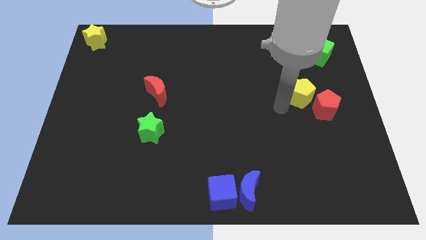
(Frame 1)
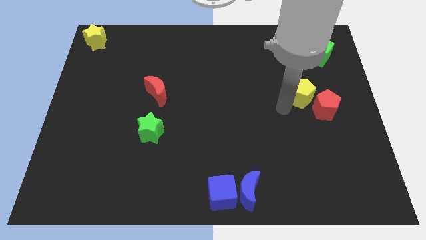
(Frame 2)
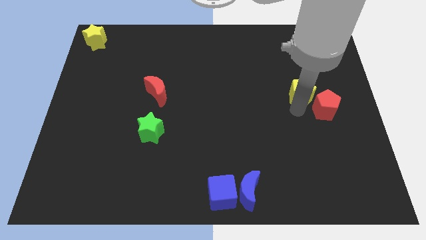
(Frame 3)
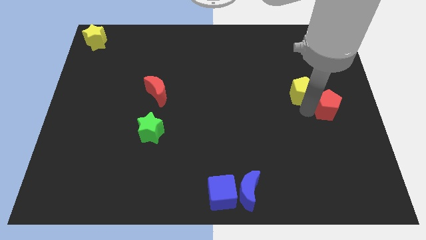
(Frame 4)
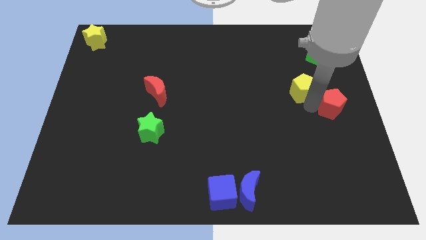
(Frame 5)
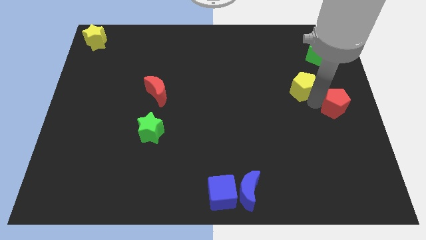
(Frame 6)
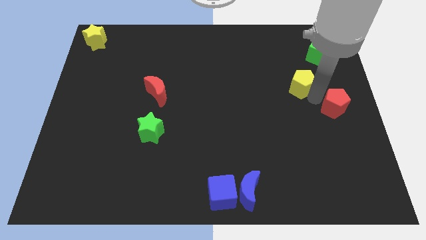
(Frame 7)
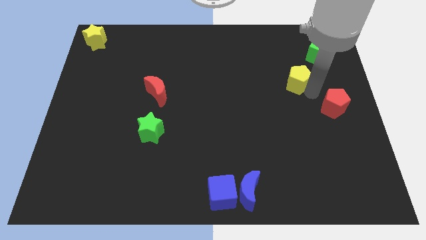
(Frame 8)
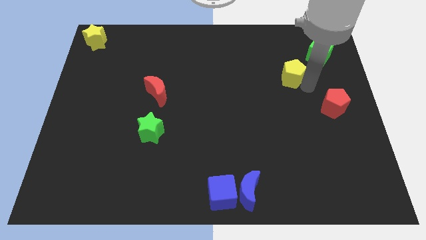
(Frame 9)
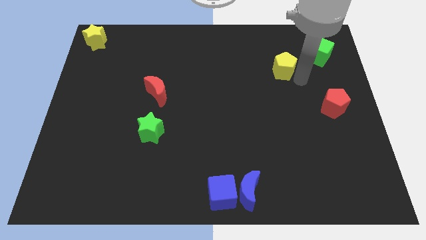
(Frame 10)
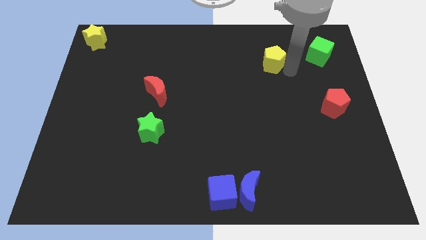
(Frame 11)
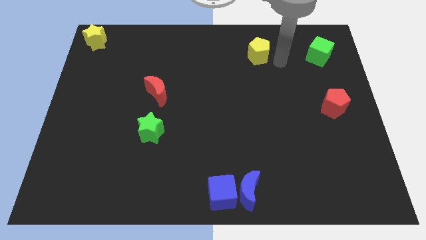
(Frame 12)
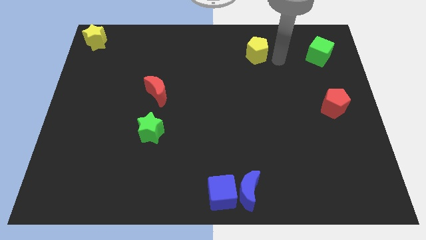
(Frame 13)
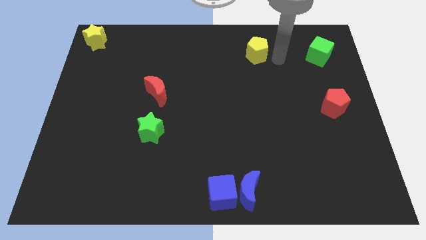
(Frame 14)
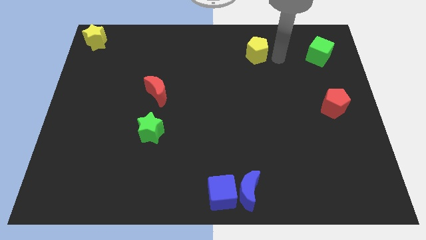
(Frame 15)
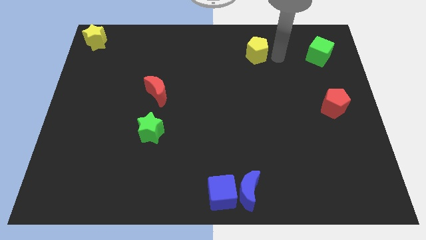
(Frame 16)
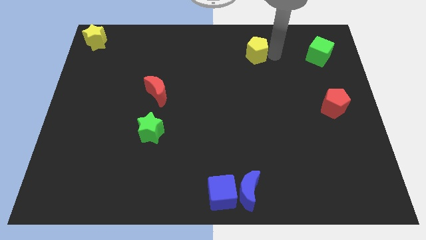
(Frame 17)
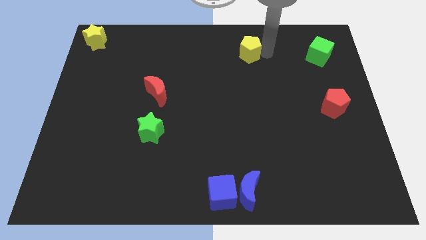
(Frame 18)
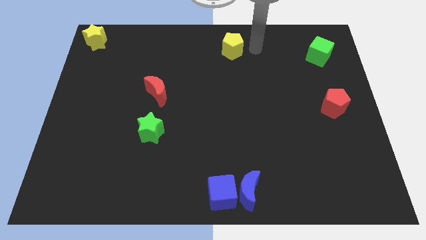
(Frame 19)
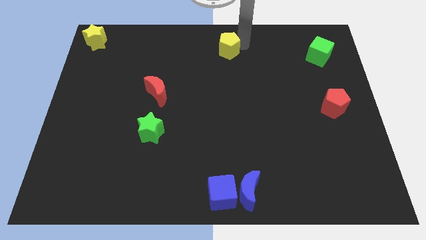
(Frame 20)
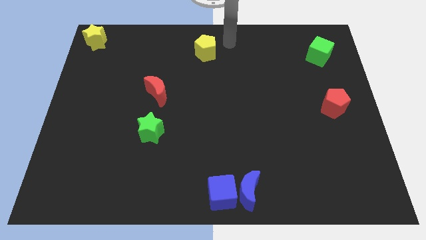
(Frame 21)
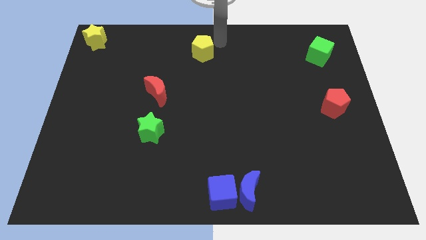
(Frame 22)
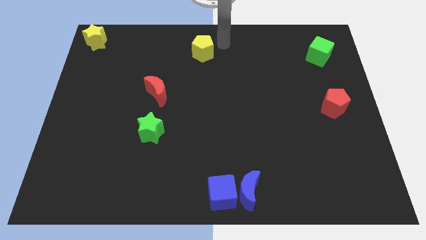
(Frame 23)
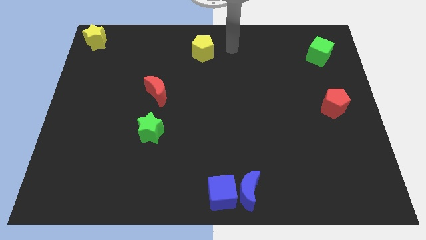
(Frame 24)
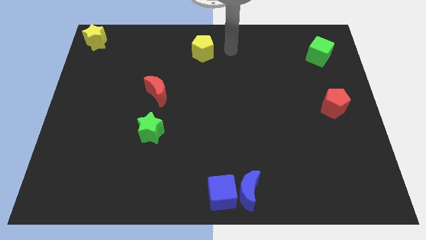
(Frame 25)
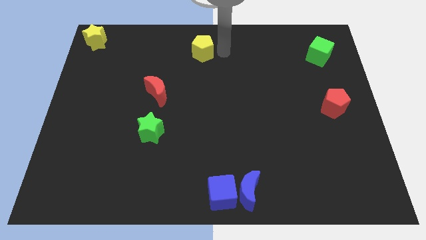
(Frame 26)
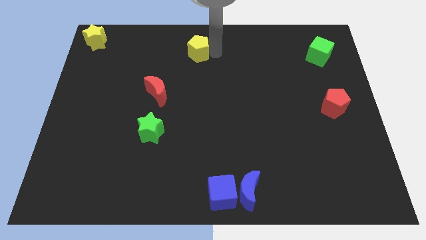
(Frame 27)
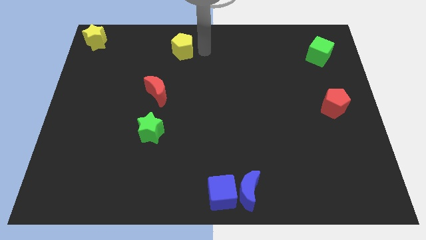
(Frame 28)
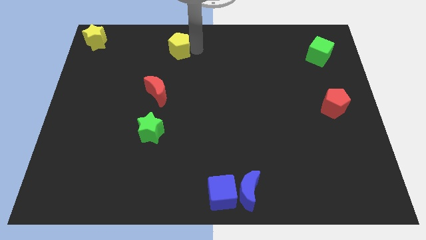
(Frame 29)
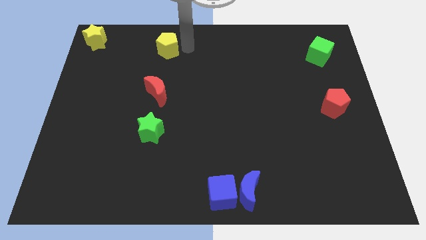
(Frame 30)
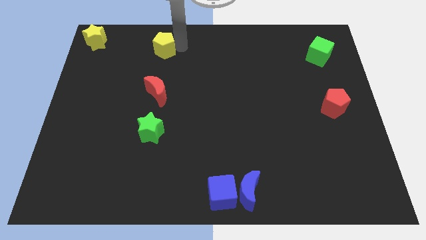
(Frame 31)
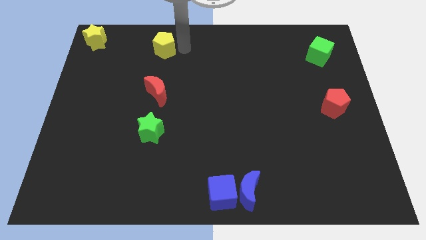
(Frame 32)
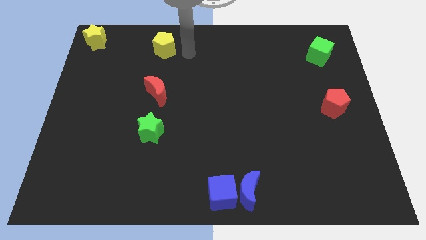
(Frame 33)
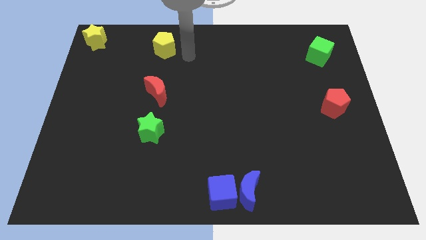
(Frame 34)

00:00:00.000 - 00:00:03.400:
separate yellow pentagon from red pentagon

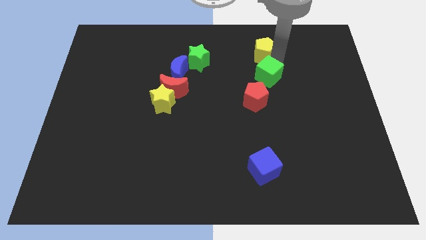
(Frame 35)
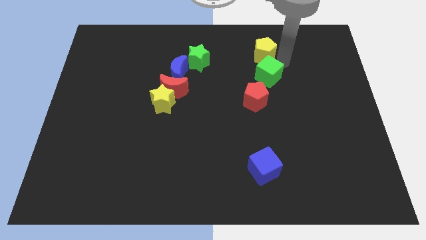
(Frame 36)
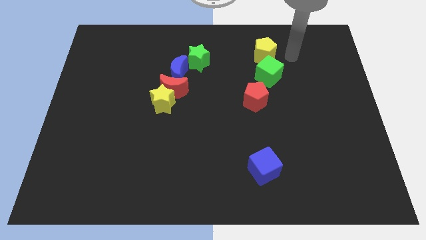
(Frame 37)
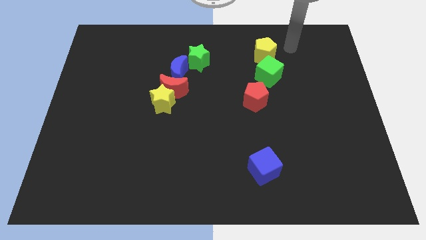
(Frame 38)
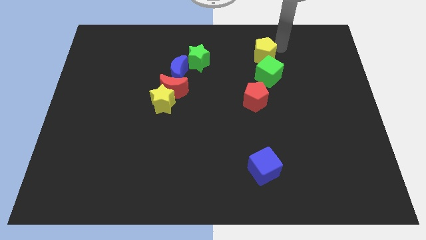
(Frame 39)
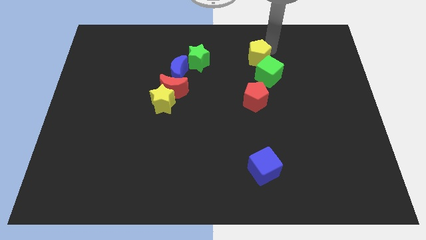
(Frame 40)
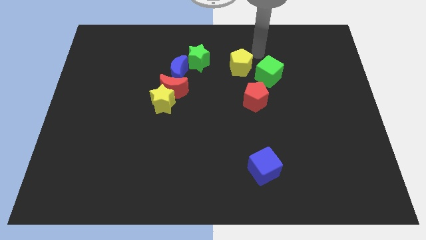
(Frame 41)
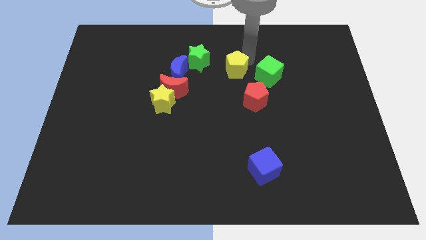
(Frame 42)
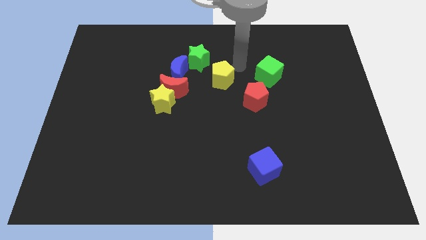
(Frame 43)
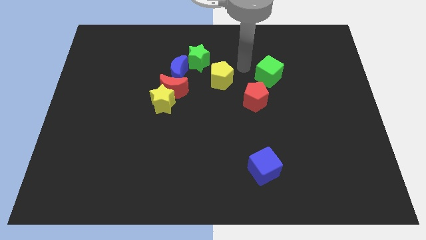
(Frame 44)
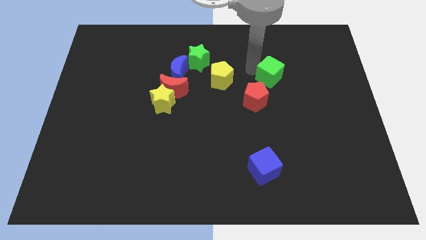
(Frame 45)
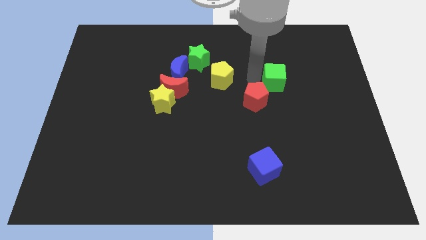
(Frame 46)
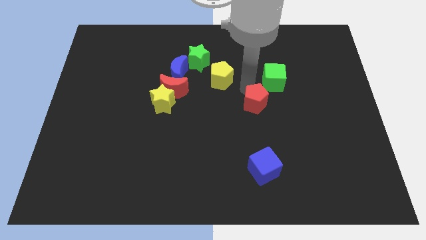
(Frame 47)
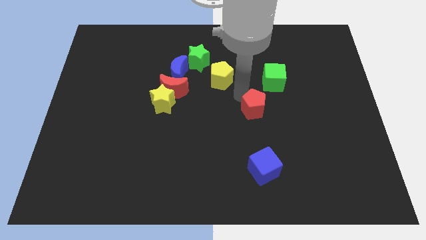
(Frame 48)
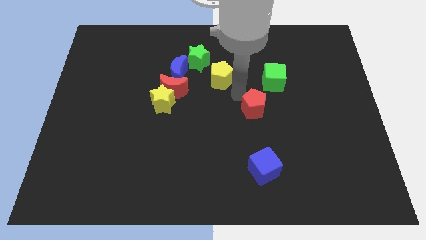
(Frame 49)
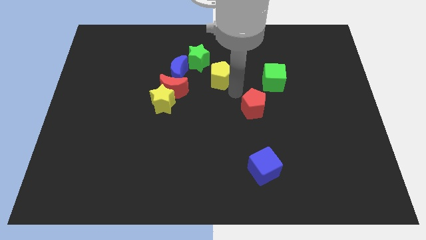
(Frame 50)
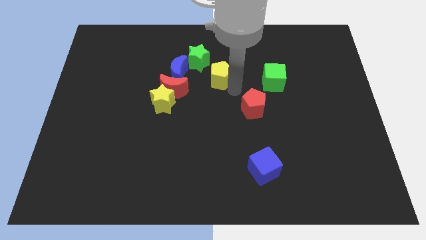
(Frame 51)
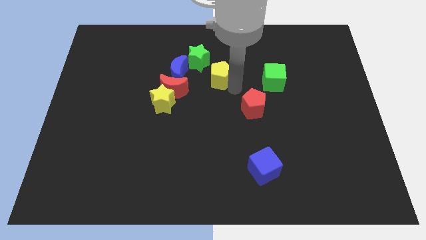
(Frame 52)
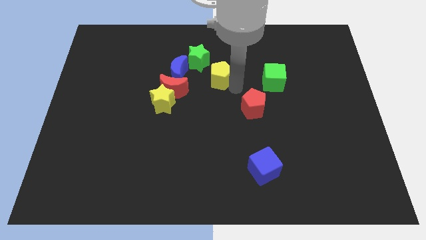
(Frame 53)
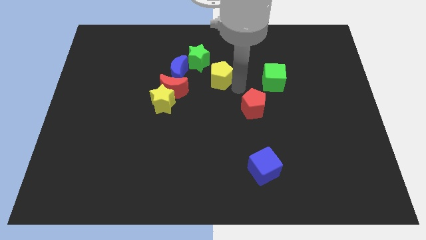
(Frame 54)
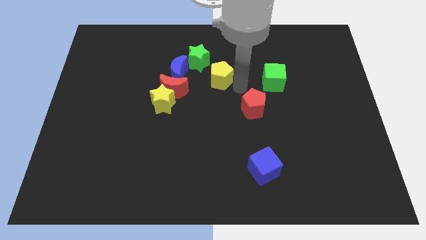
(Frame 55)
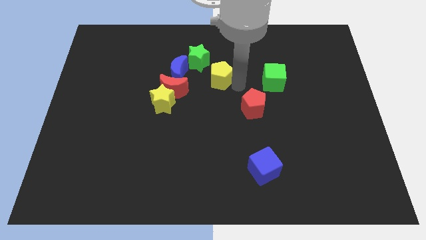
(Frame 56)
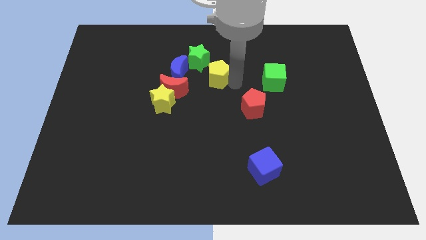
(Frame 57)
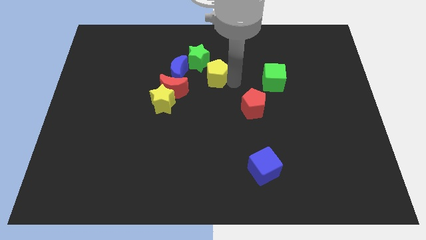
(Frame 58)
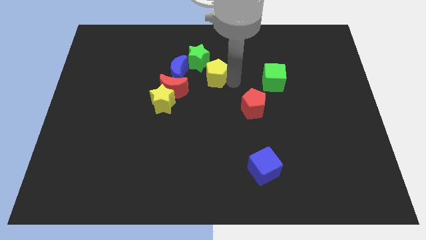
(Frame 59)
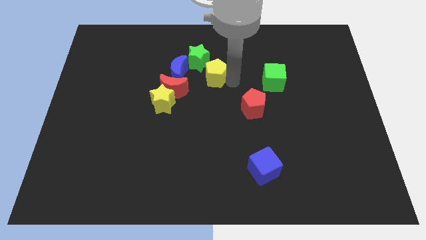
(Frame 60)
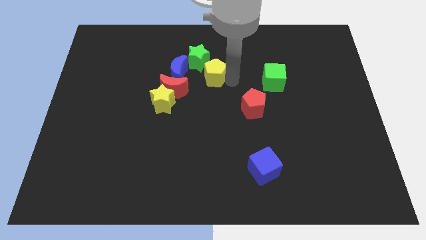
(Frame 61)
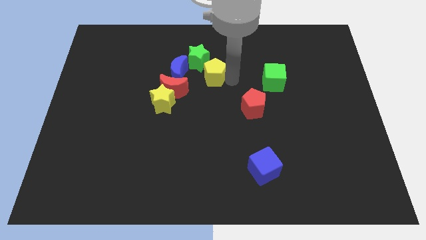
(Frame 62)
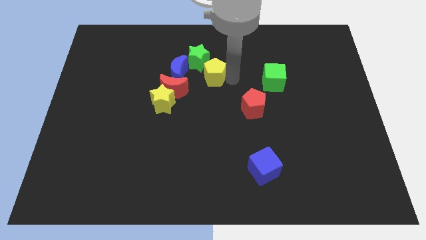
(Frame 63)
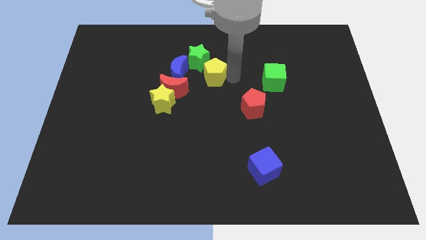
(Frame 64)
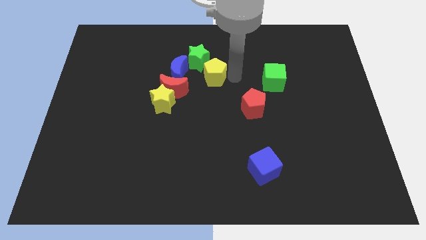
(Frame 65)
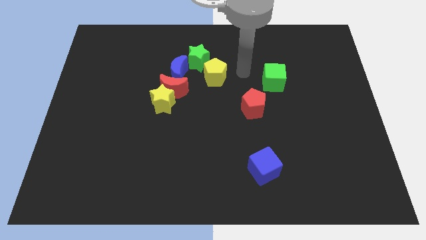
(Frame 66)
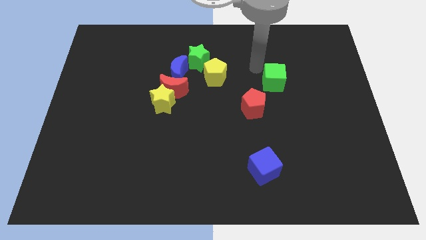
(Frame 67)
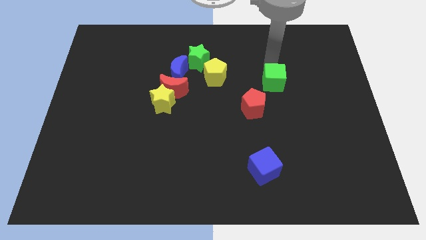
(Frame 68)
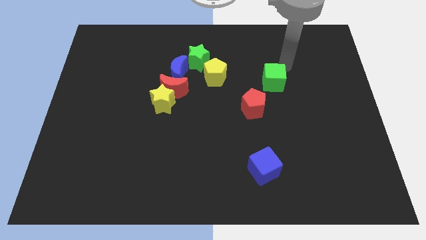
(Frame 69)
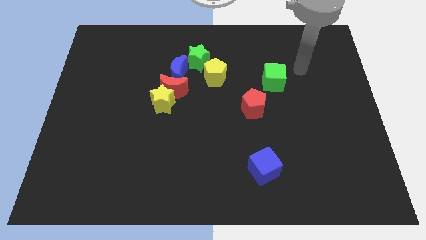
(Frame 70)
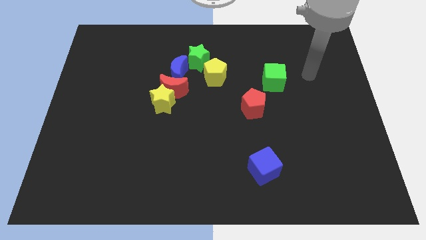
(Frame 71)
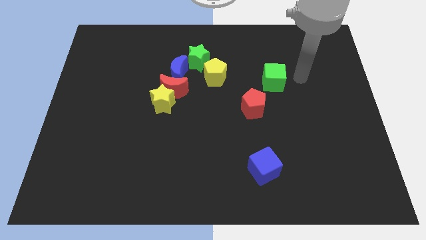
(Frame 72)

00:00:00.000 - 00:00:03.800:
move the yellow pentagon closer to the bottom right of the green star

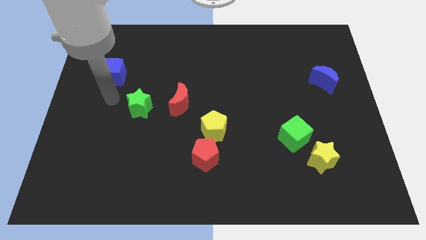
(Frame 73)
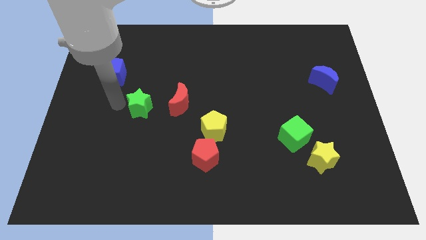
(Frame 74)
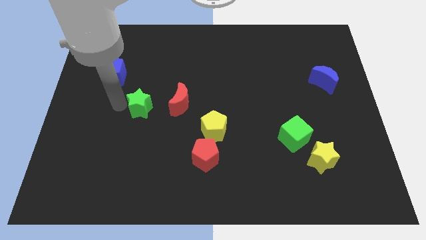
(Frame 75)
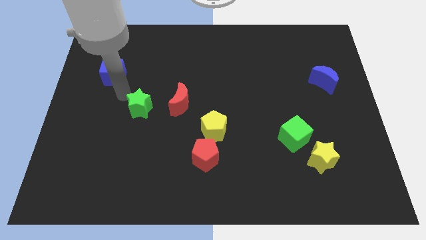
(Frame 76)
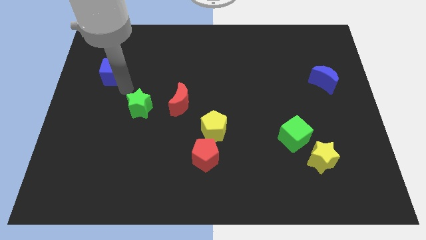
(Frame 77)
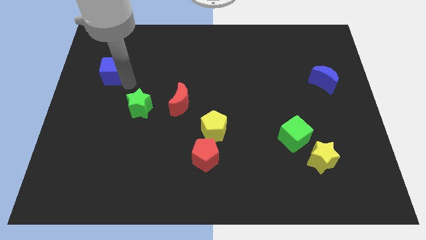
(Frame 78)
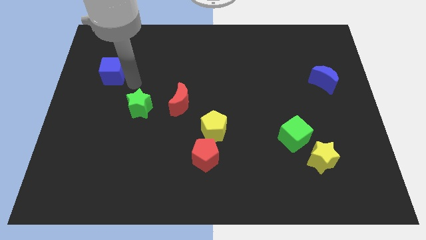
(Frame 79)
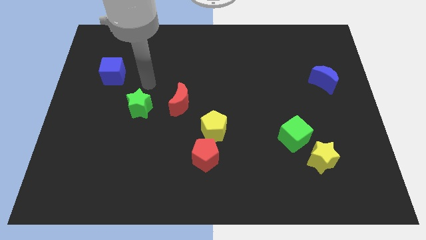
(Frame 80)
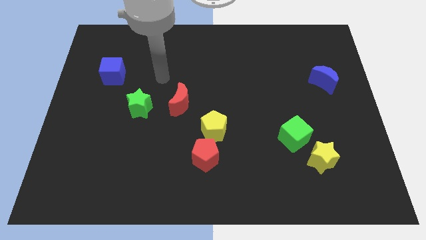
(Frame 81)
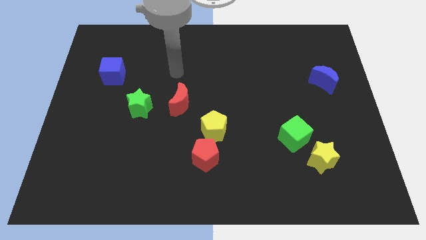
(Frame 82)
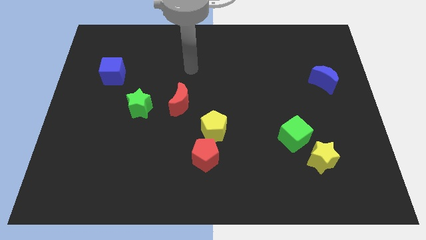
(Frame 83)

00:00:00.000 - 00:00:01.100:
point your arm at the top of the red crescent

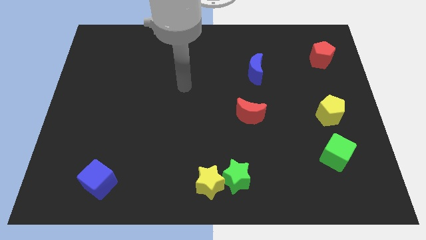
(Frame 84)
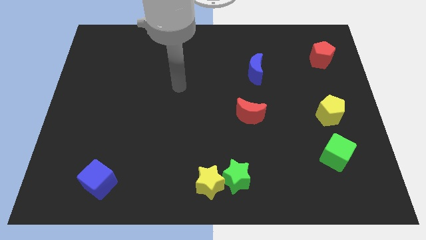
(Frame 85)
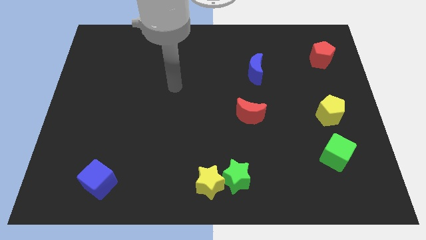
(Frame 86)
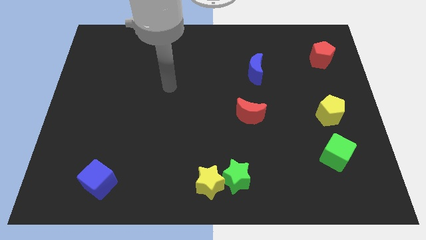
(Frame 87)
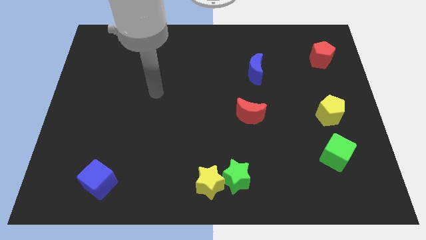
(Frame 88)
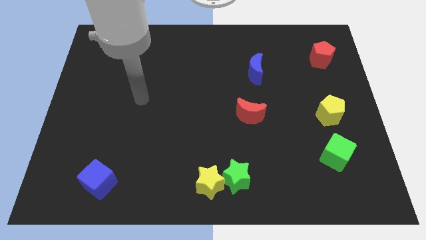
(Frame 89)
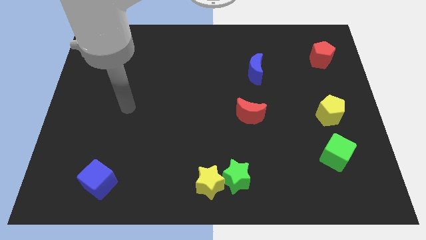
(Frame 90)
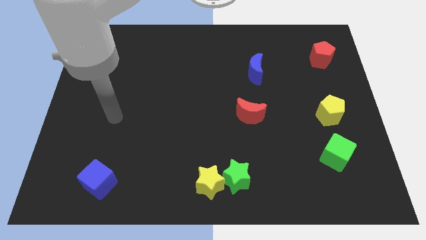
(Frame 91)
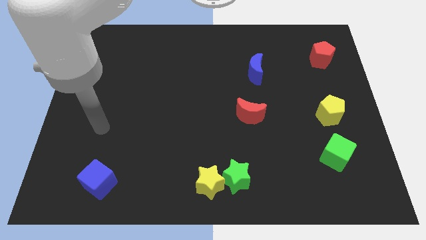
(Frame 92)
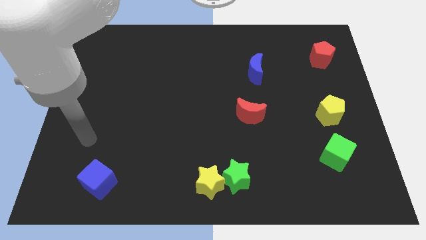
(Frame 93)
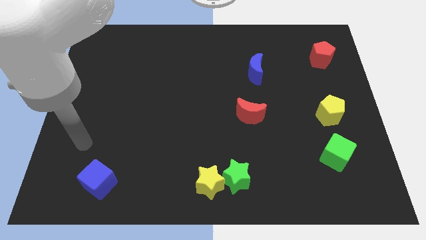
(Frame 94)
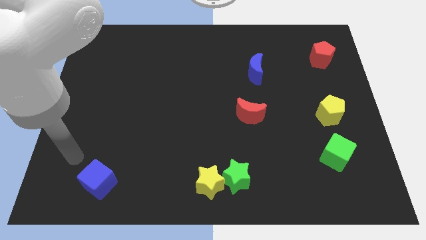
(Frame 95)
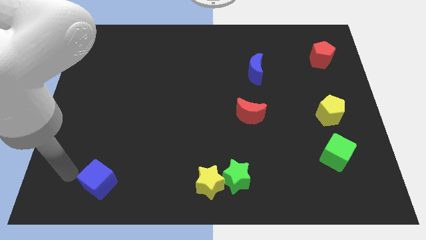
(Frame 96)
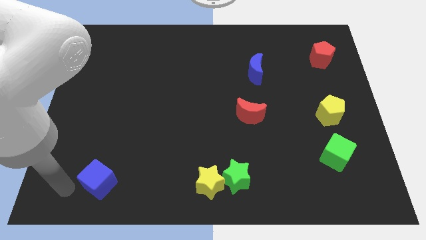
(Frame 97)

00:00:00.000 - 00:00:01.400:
move yourself to the left side of the blue cube
